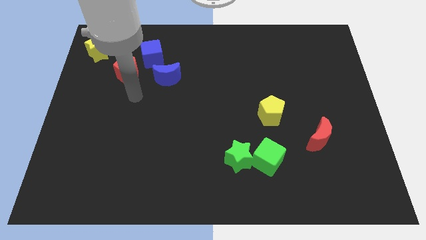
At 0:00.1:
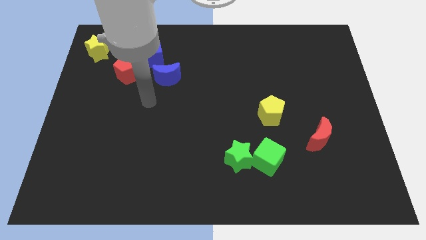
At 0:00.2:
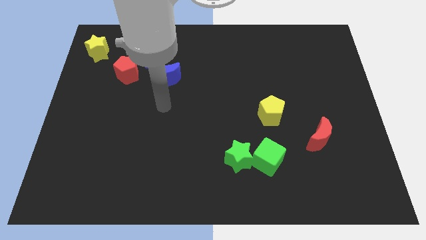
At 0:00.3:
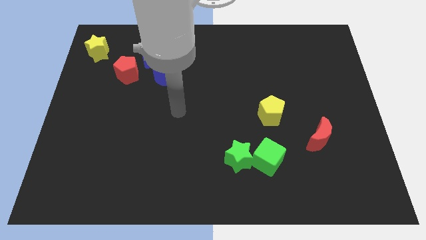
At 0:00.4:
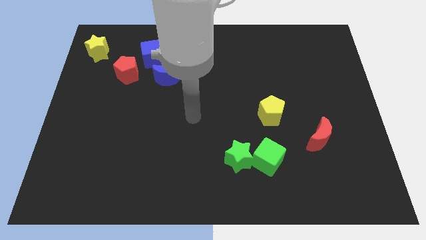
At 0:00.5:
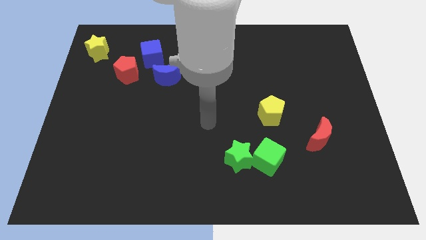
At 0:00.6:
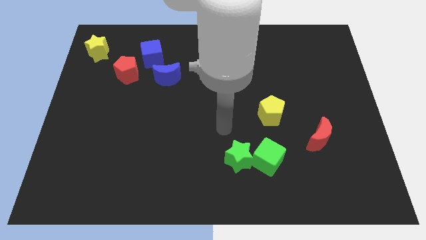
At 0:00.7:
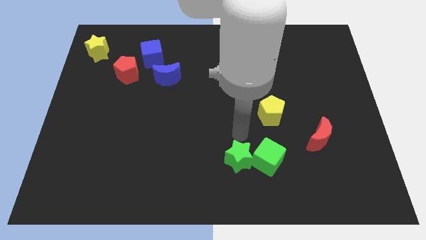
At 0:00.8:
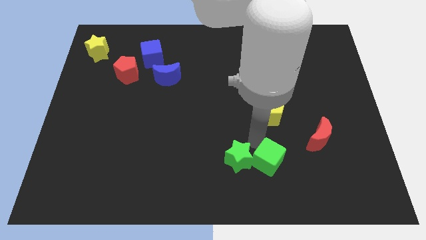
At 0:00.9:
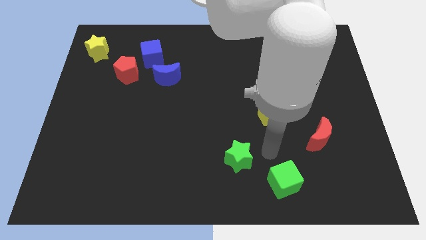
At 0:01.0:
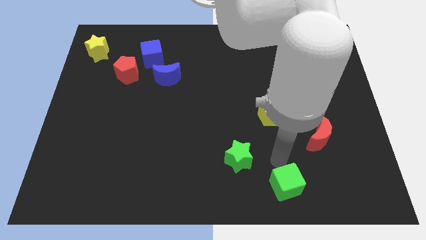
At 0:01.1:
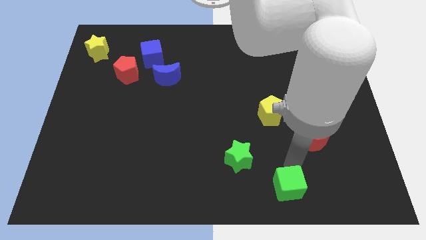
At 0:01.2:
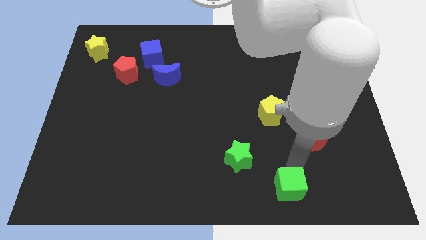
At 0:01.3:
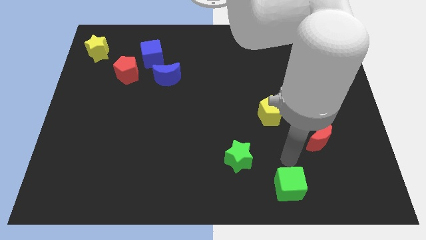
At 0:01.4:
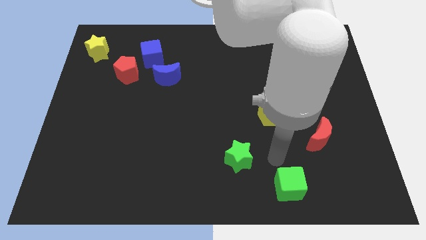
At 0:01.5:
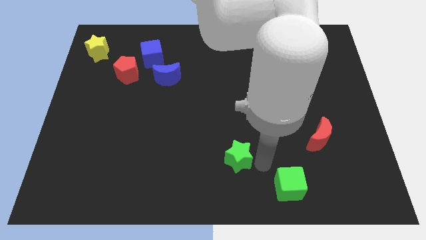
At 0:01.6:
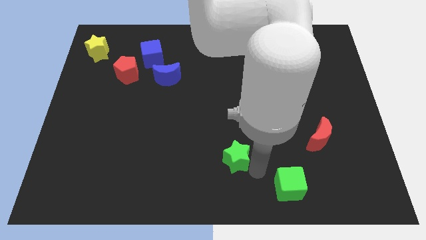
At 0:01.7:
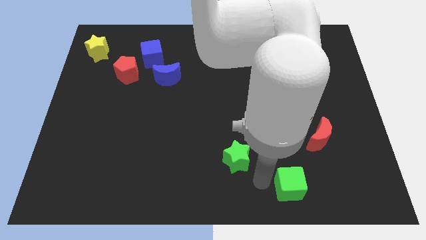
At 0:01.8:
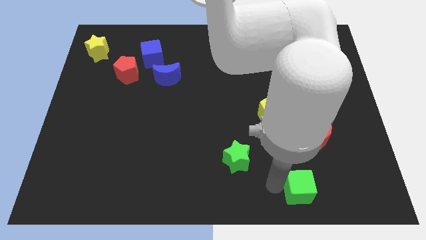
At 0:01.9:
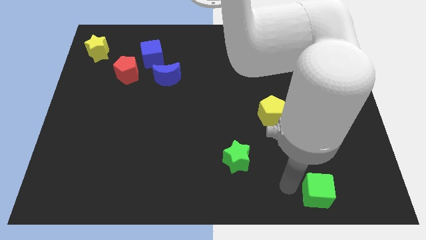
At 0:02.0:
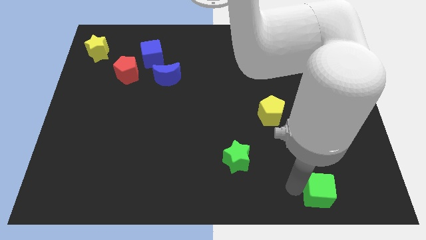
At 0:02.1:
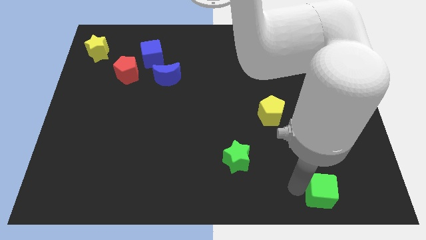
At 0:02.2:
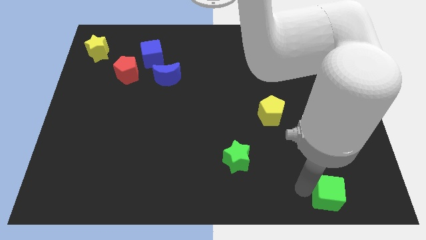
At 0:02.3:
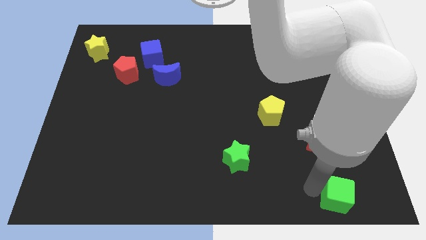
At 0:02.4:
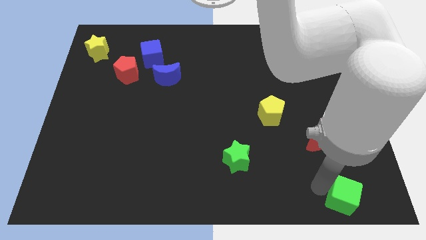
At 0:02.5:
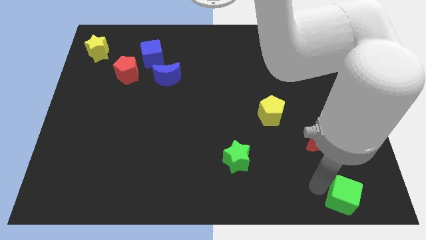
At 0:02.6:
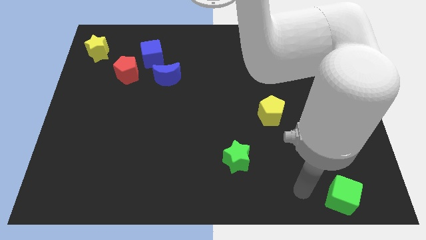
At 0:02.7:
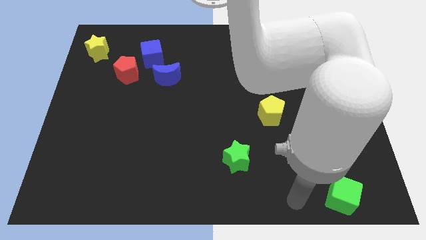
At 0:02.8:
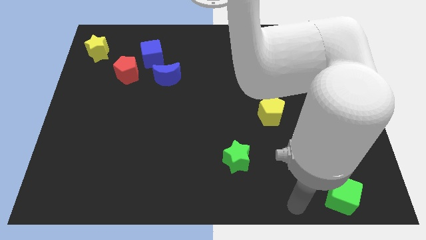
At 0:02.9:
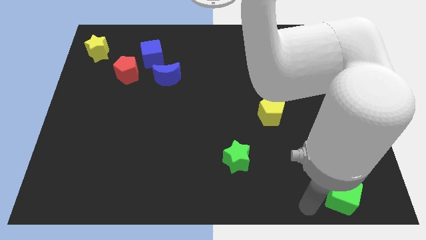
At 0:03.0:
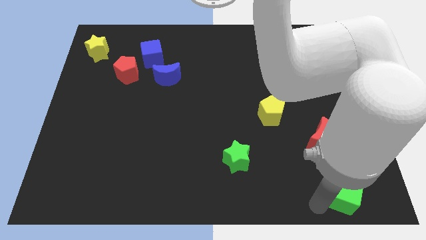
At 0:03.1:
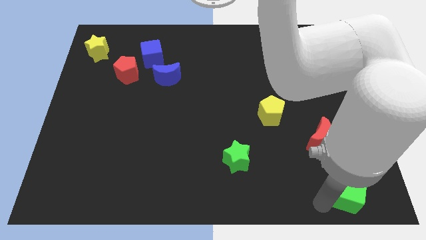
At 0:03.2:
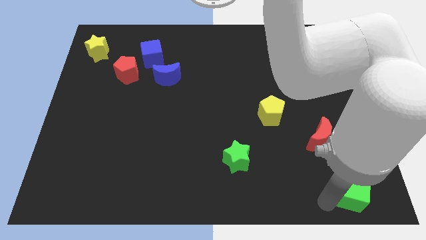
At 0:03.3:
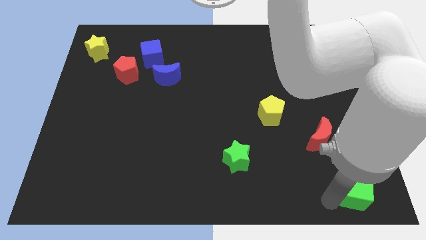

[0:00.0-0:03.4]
separate the green cube from the green star

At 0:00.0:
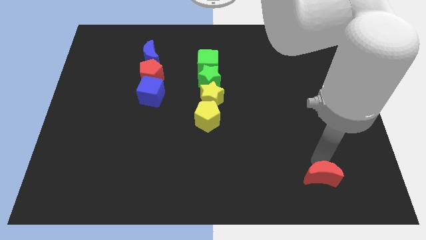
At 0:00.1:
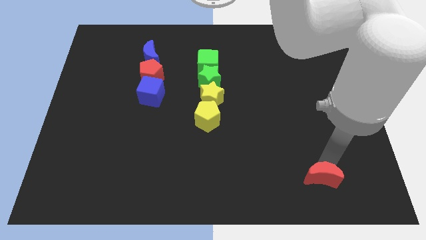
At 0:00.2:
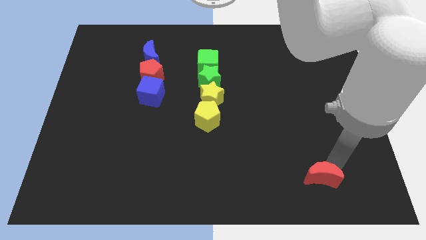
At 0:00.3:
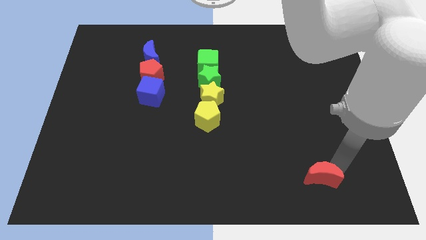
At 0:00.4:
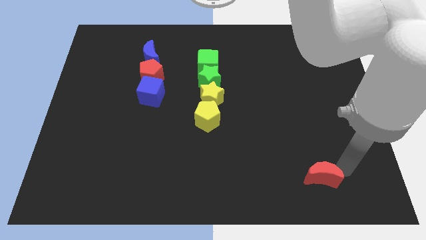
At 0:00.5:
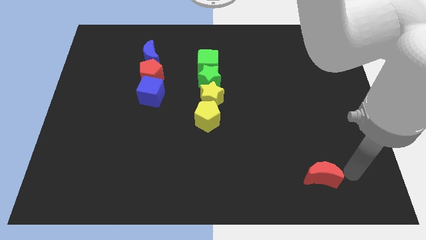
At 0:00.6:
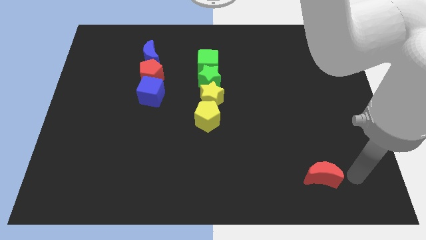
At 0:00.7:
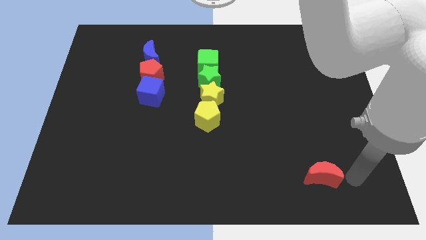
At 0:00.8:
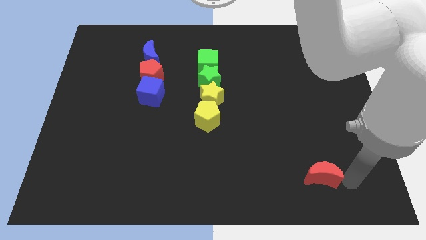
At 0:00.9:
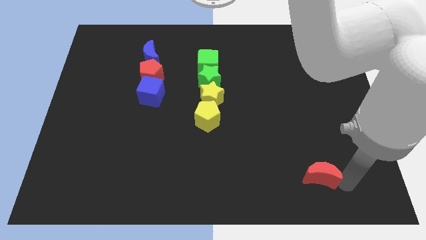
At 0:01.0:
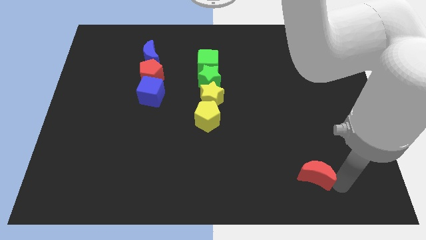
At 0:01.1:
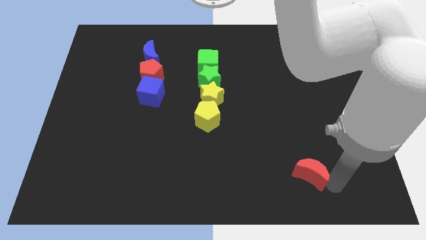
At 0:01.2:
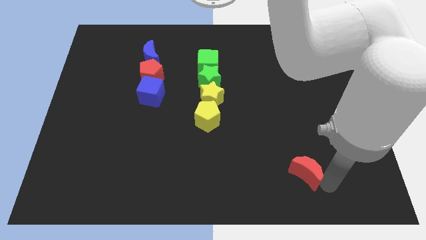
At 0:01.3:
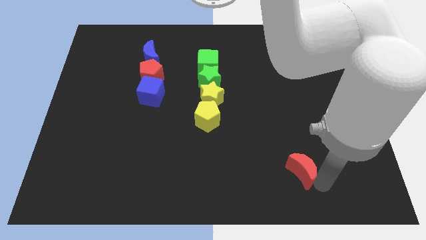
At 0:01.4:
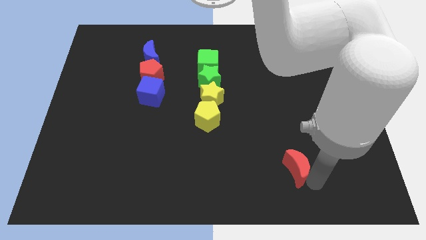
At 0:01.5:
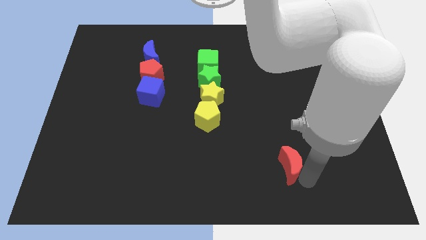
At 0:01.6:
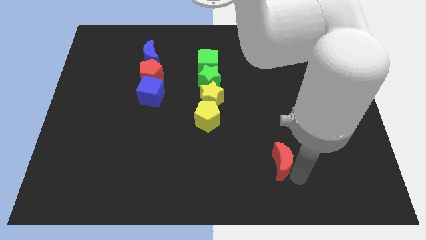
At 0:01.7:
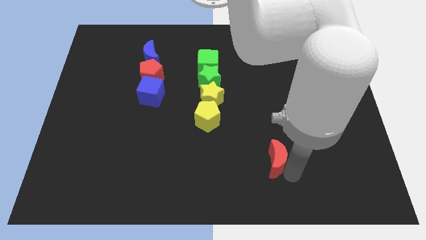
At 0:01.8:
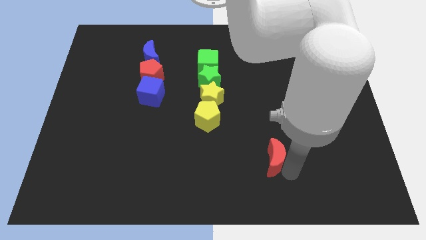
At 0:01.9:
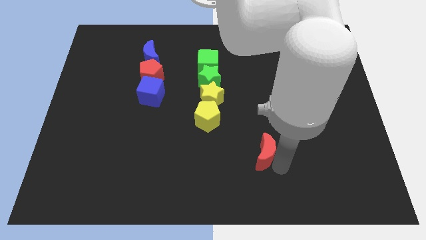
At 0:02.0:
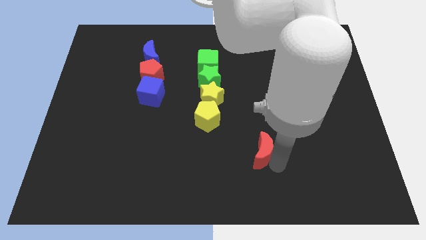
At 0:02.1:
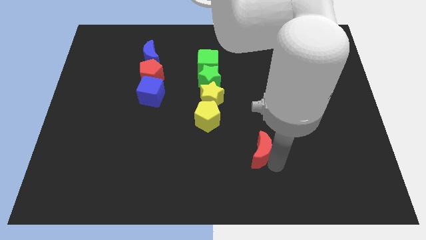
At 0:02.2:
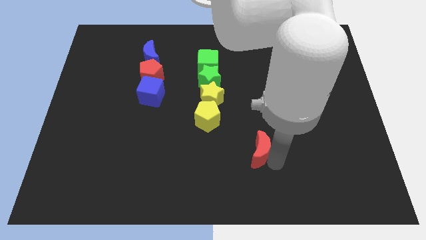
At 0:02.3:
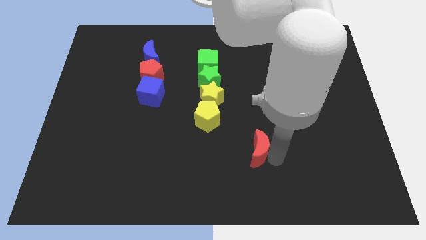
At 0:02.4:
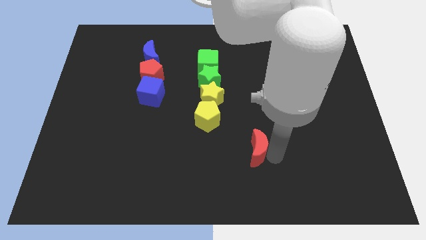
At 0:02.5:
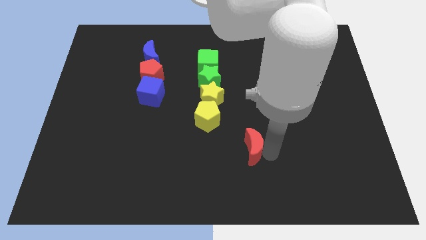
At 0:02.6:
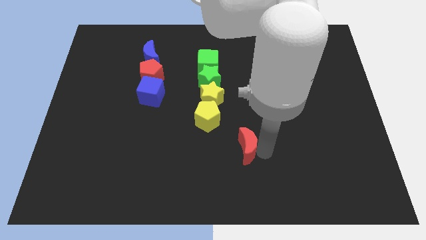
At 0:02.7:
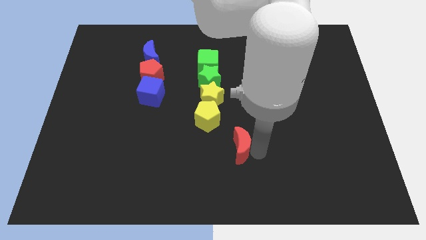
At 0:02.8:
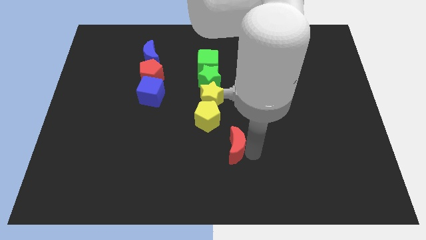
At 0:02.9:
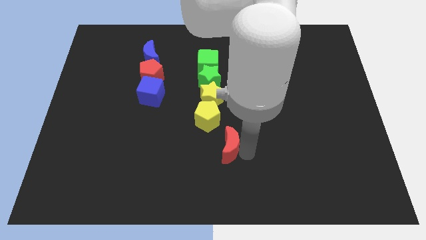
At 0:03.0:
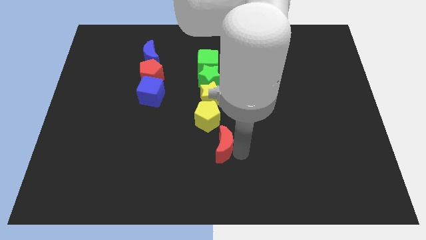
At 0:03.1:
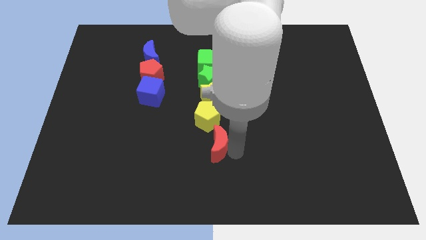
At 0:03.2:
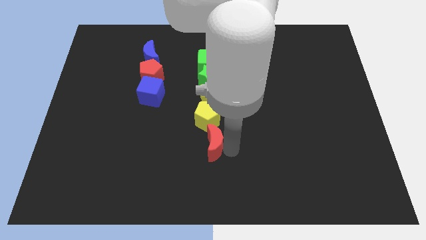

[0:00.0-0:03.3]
place the red crescent at the bottom of the yellow pentagon

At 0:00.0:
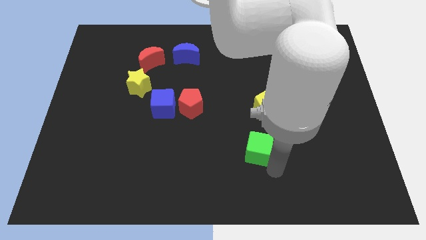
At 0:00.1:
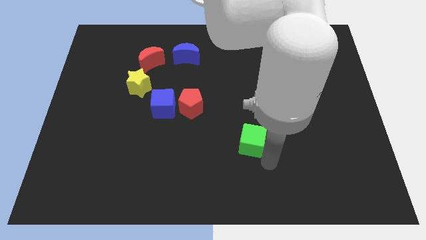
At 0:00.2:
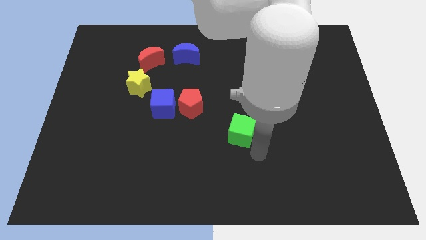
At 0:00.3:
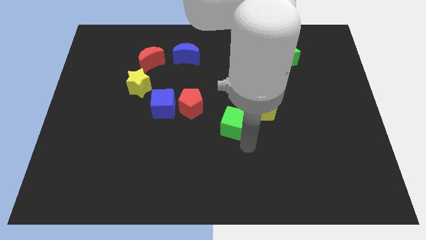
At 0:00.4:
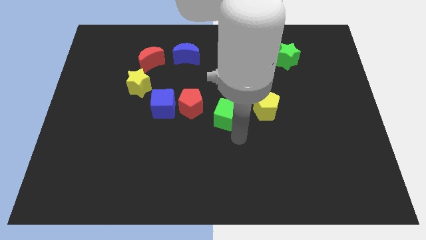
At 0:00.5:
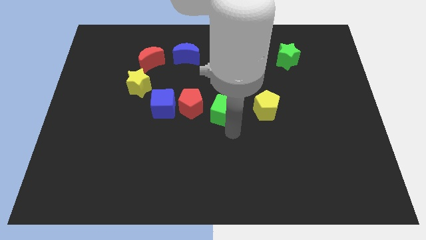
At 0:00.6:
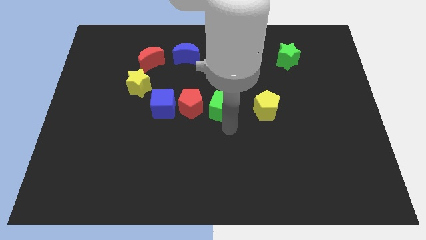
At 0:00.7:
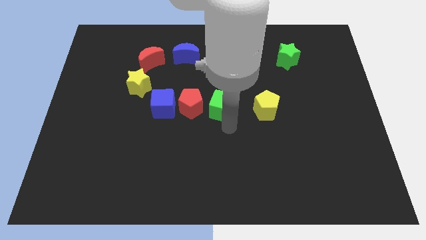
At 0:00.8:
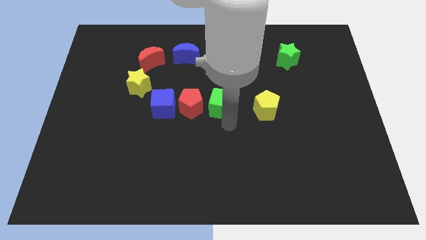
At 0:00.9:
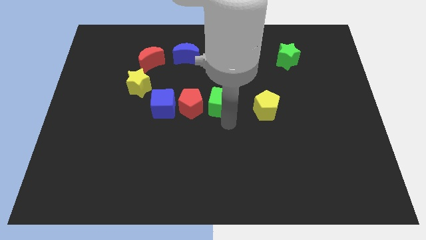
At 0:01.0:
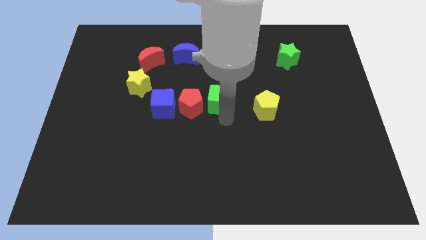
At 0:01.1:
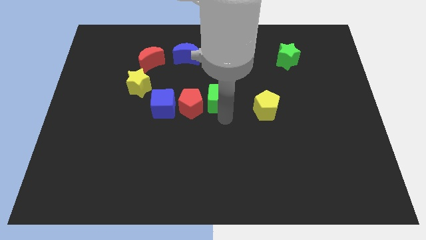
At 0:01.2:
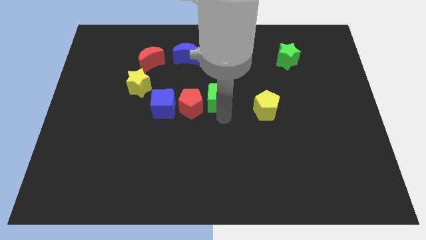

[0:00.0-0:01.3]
place green cube on the right side of the red pentagon

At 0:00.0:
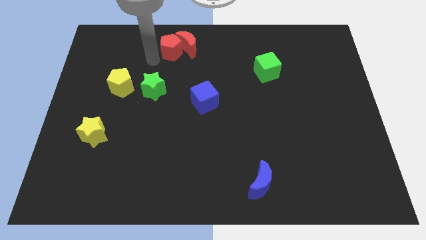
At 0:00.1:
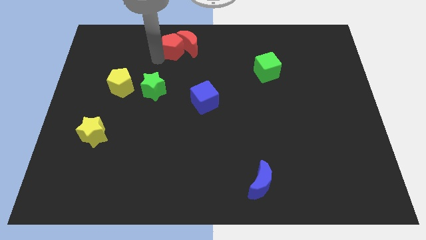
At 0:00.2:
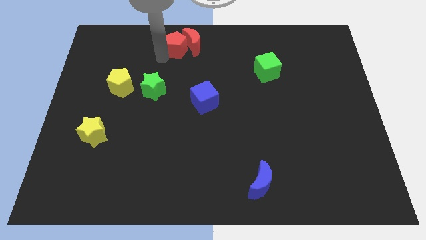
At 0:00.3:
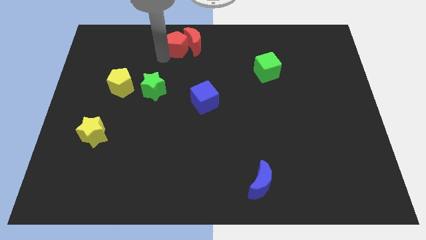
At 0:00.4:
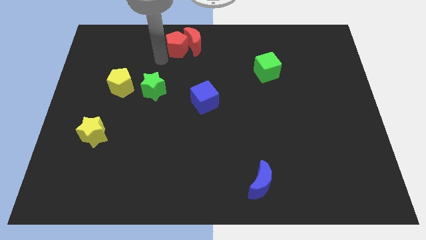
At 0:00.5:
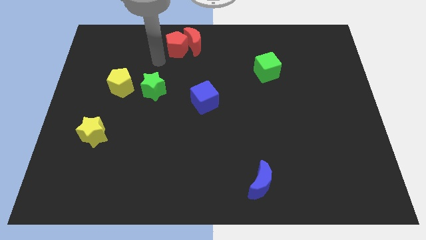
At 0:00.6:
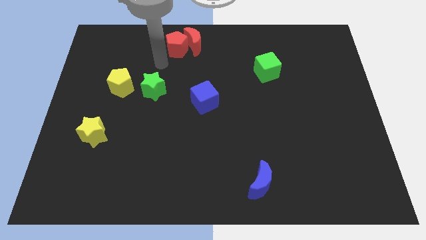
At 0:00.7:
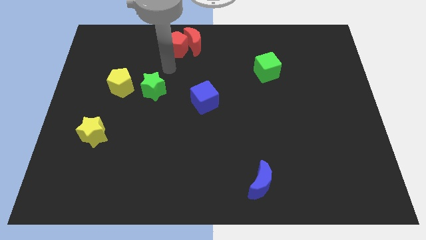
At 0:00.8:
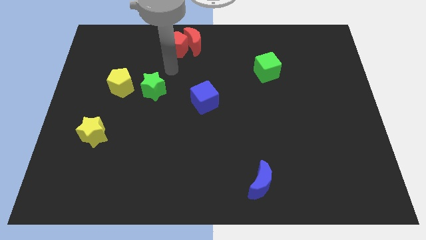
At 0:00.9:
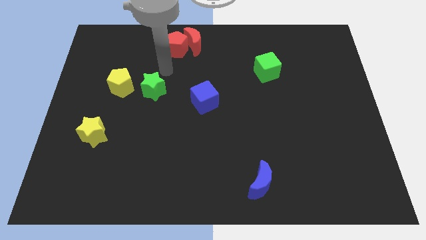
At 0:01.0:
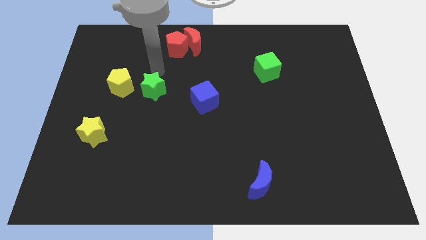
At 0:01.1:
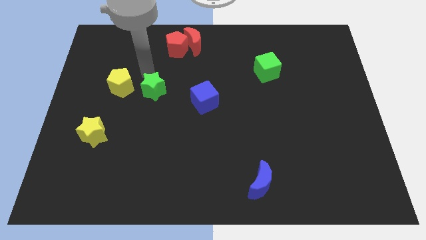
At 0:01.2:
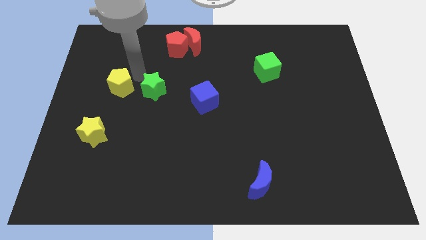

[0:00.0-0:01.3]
point your arm above green star
